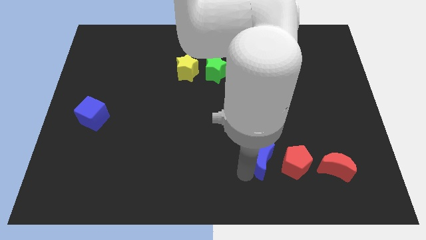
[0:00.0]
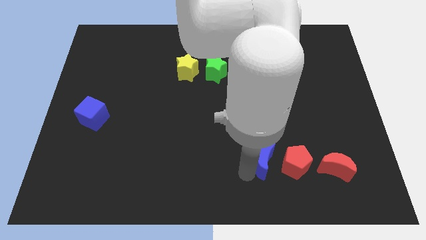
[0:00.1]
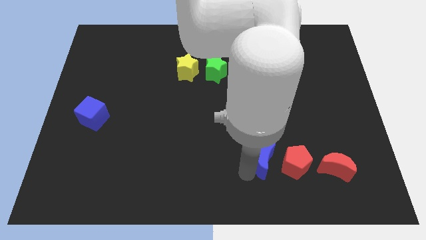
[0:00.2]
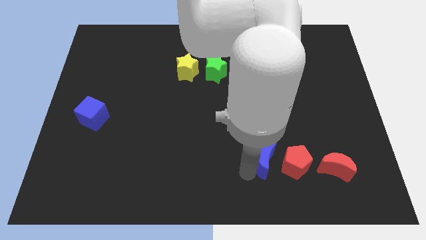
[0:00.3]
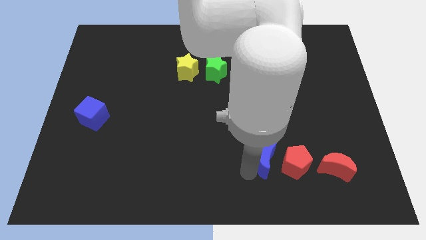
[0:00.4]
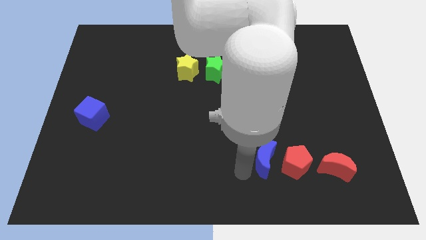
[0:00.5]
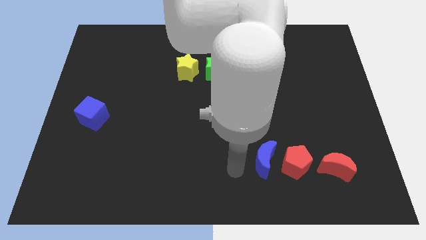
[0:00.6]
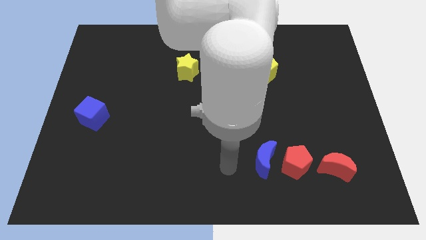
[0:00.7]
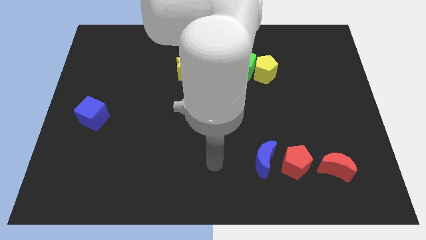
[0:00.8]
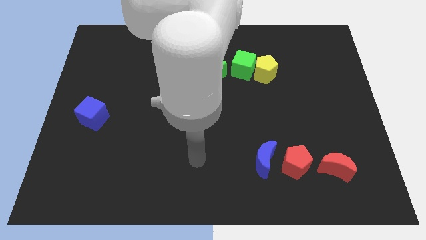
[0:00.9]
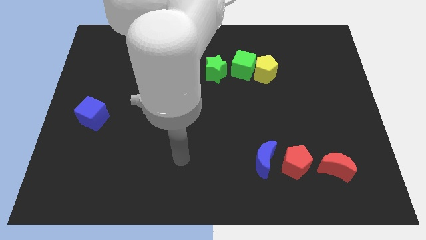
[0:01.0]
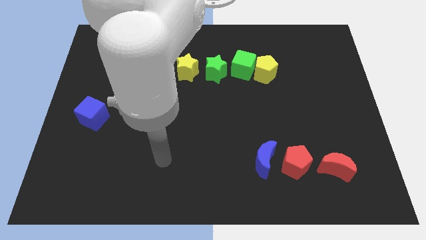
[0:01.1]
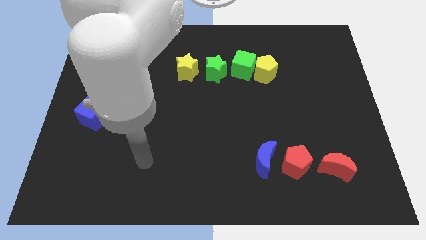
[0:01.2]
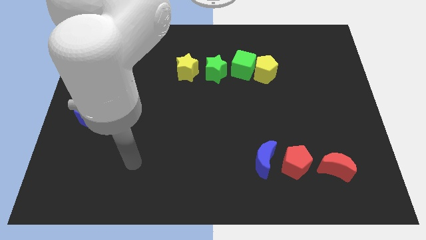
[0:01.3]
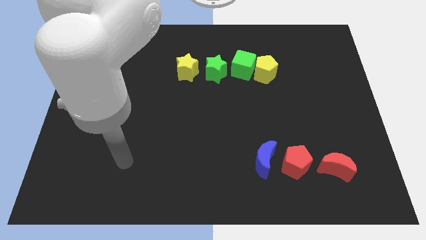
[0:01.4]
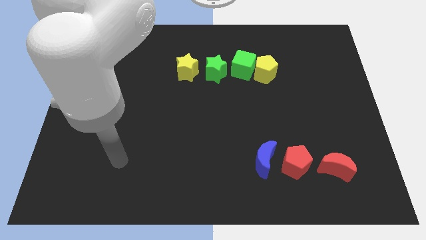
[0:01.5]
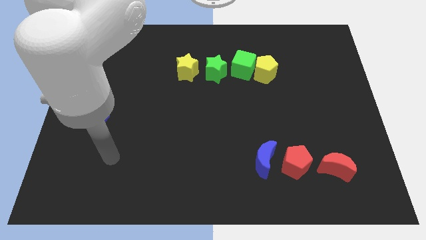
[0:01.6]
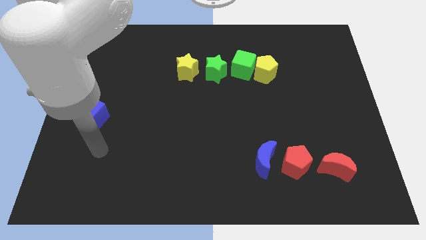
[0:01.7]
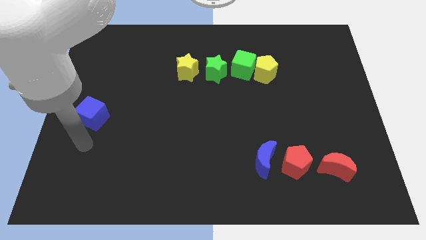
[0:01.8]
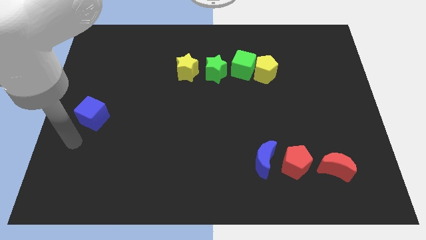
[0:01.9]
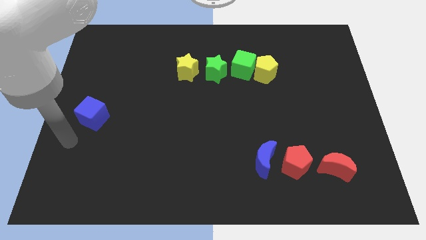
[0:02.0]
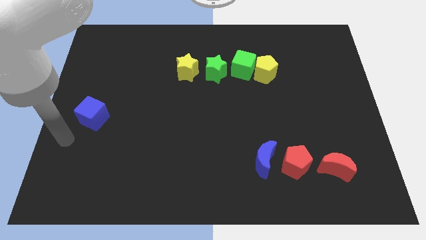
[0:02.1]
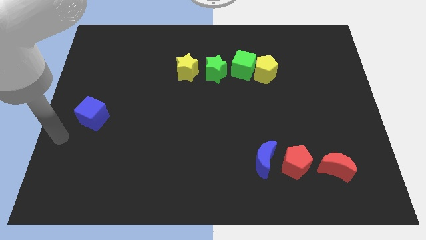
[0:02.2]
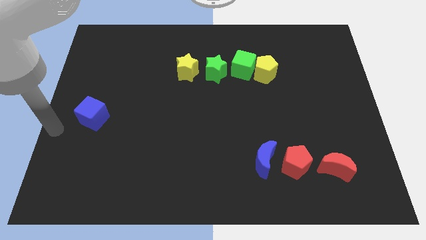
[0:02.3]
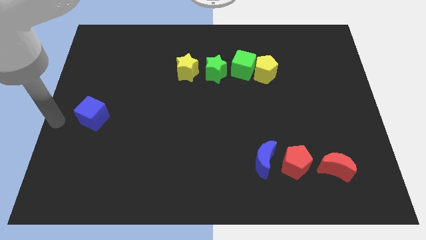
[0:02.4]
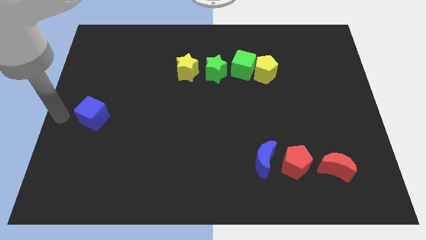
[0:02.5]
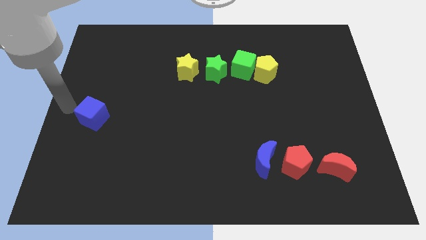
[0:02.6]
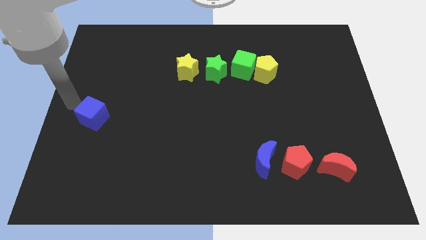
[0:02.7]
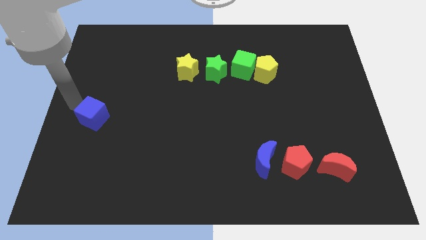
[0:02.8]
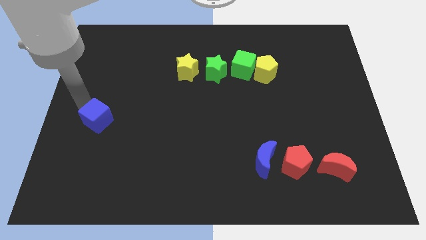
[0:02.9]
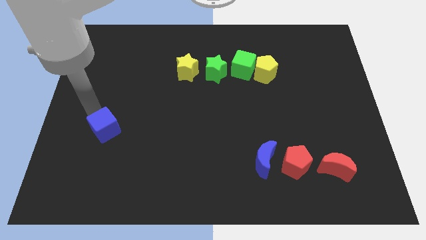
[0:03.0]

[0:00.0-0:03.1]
push the blue crescent to the left of the red pentagon to form a horizontal line of blocks

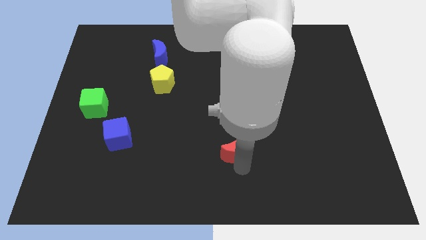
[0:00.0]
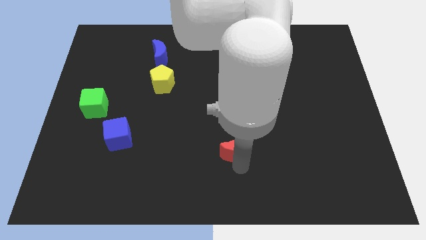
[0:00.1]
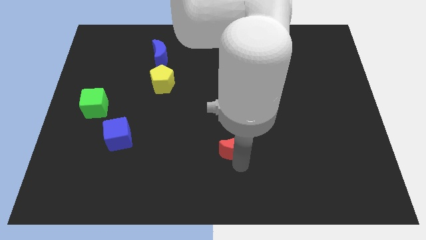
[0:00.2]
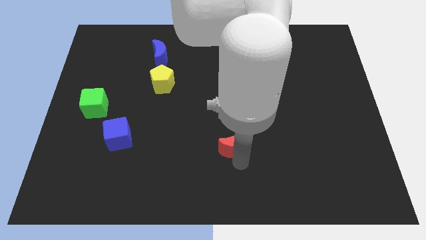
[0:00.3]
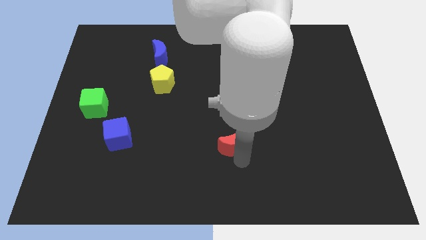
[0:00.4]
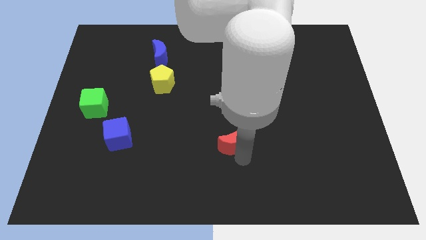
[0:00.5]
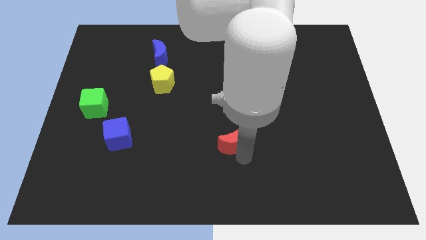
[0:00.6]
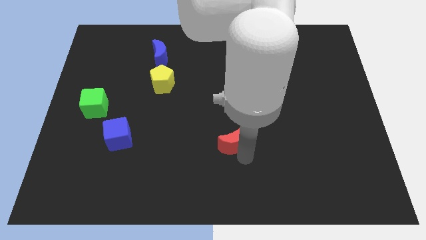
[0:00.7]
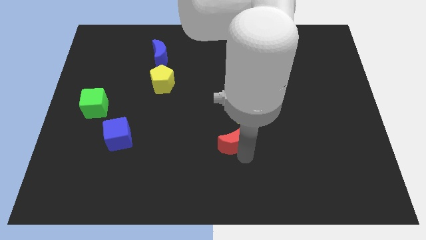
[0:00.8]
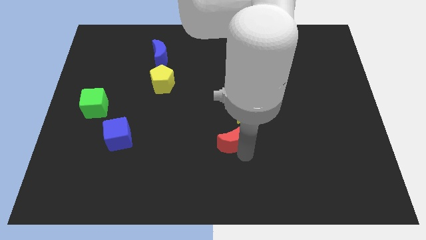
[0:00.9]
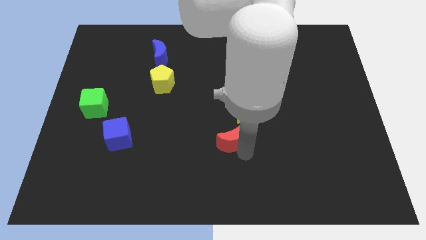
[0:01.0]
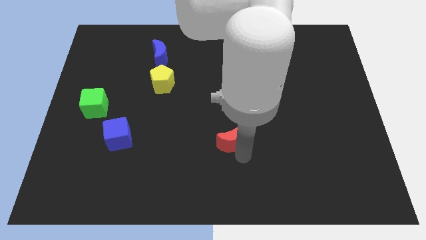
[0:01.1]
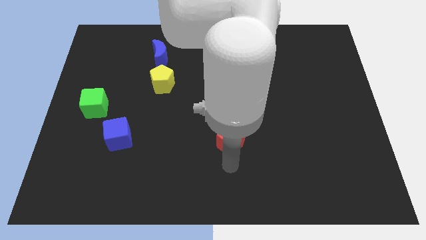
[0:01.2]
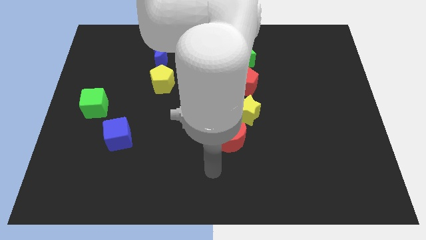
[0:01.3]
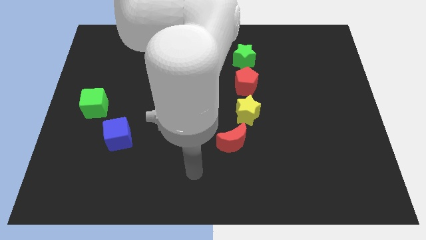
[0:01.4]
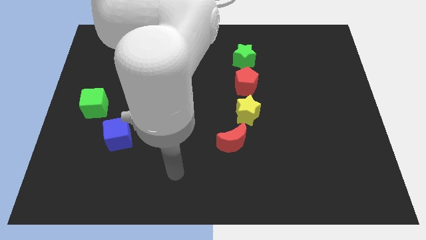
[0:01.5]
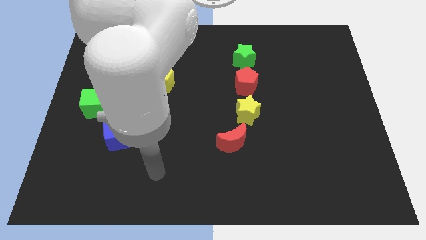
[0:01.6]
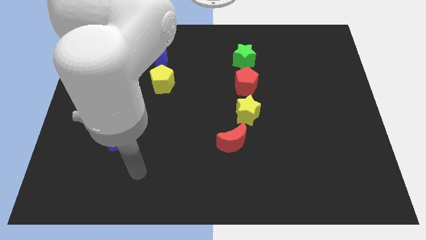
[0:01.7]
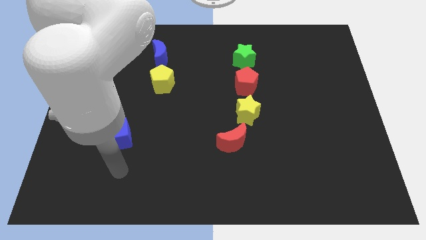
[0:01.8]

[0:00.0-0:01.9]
place red moon to the bottom left of the yellow star

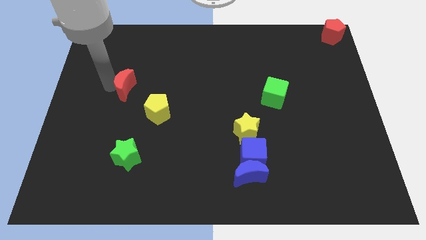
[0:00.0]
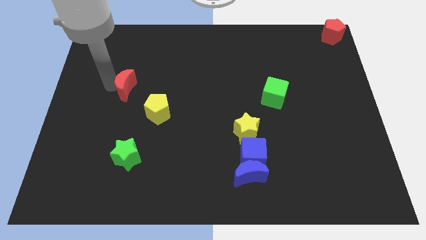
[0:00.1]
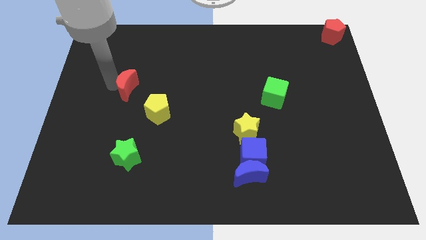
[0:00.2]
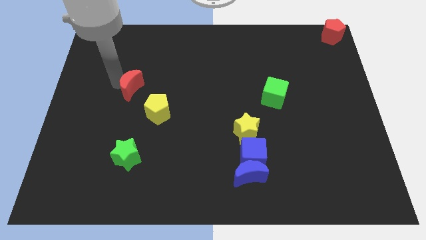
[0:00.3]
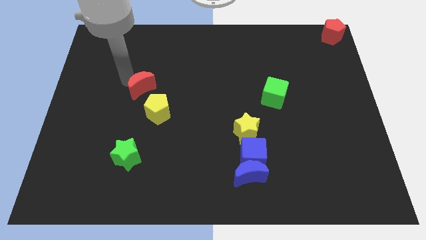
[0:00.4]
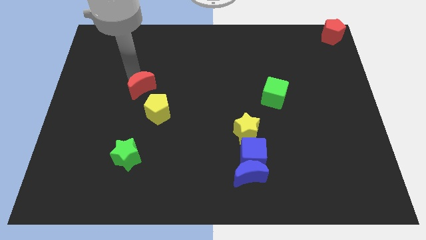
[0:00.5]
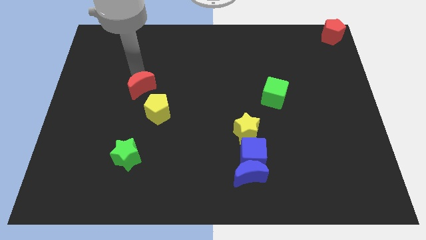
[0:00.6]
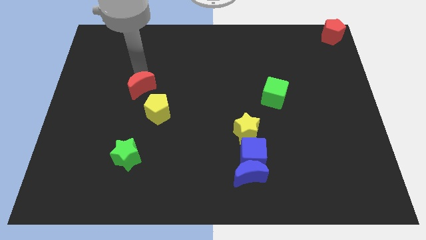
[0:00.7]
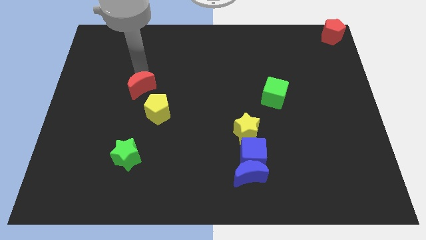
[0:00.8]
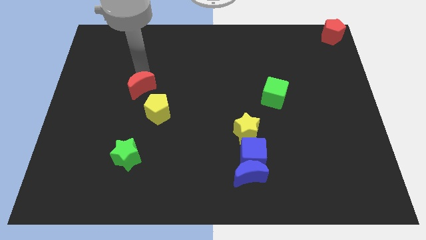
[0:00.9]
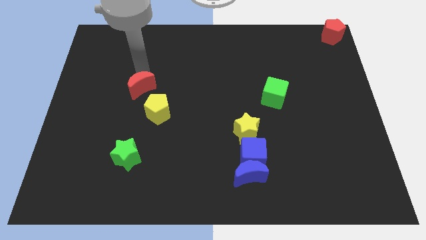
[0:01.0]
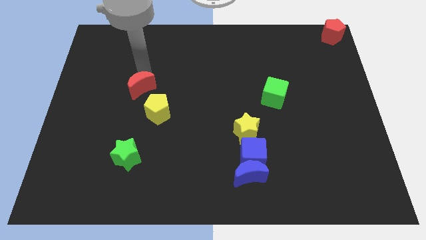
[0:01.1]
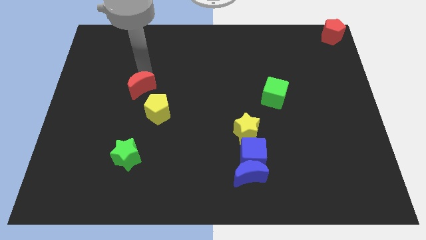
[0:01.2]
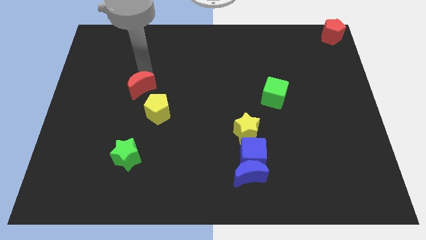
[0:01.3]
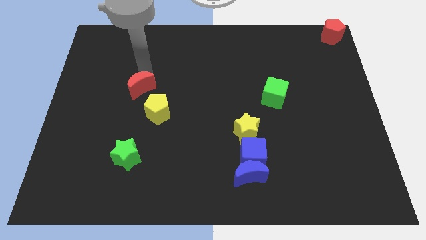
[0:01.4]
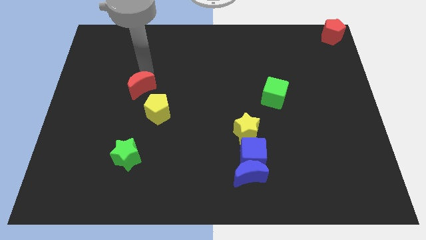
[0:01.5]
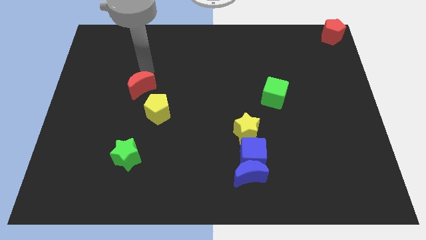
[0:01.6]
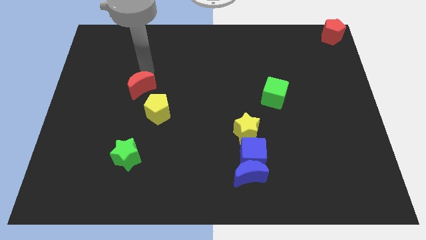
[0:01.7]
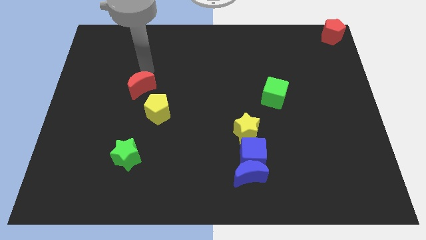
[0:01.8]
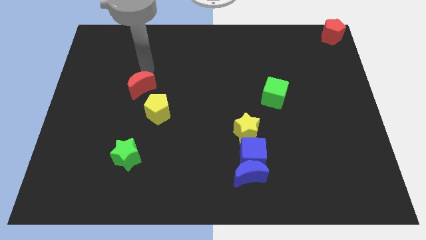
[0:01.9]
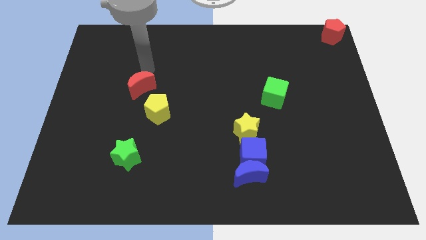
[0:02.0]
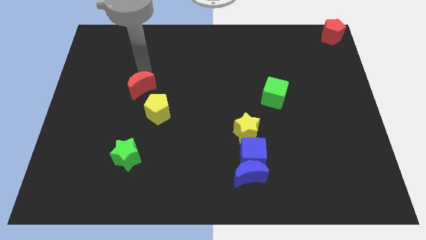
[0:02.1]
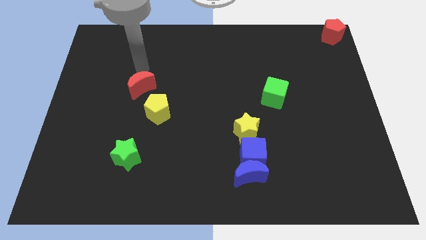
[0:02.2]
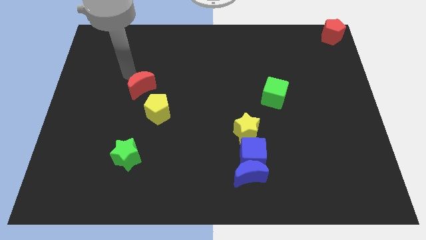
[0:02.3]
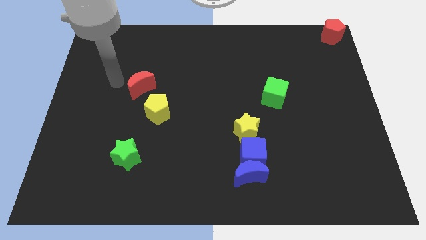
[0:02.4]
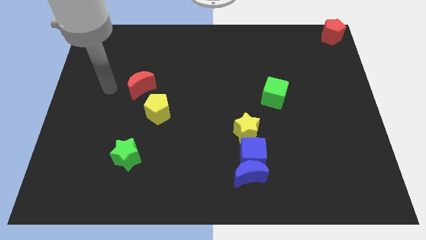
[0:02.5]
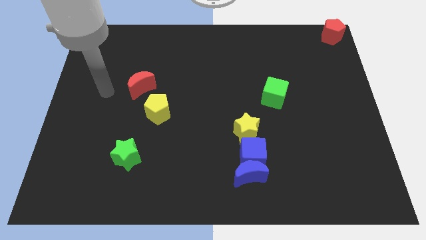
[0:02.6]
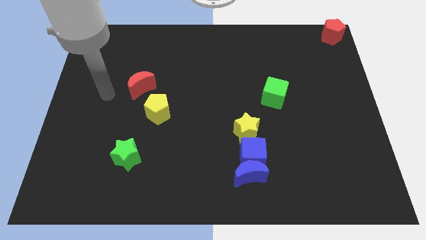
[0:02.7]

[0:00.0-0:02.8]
place the red crescent top left to the yellow pentagon

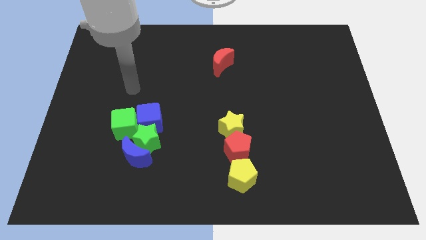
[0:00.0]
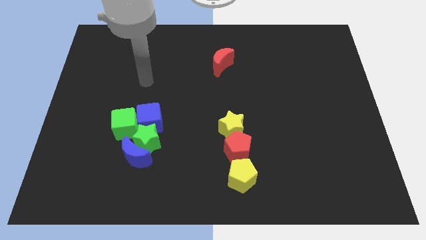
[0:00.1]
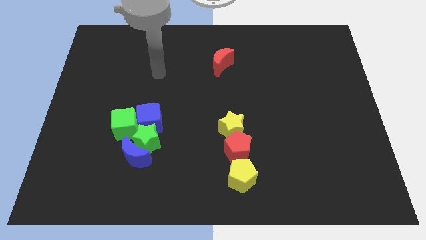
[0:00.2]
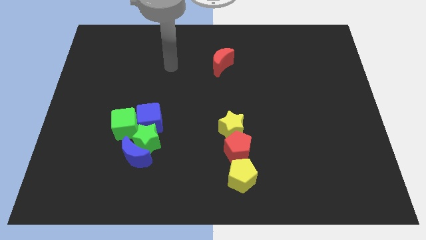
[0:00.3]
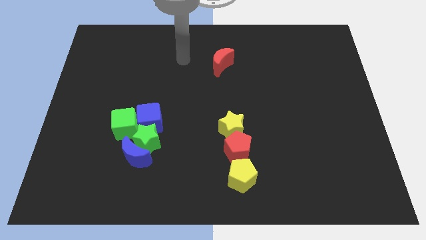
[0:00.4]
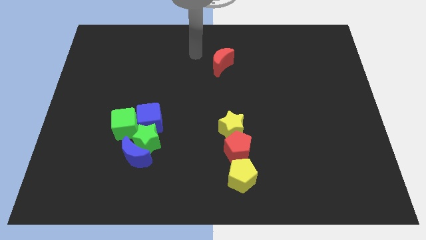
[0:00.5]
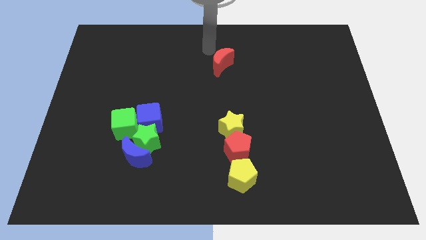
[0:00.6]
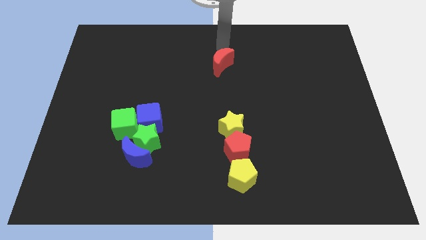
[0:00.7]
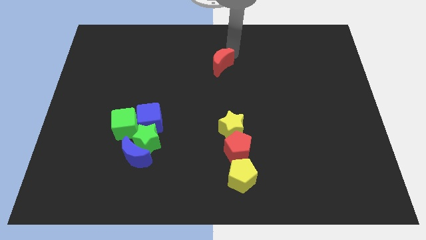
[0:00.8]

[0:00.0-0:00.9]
move the arm to the top of the red moon

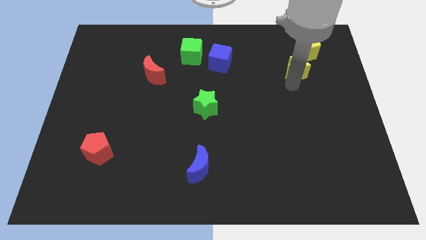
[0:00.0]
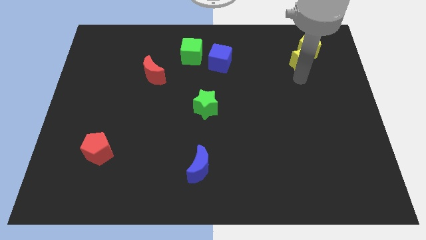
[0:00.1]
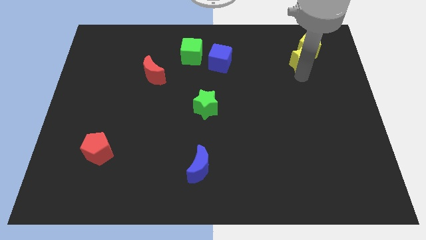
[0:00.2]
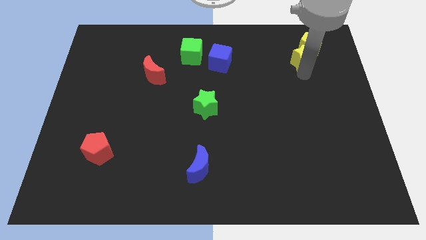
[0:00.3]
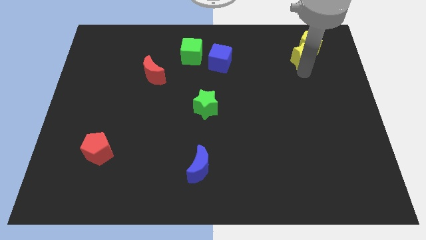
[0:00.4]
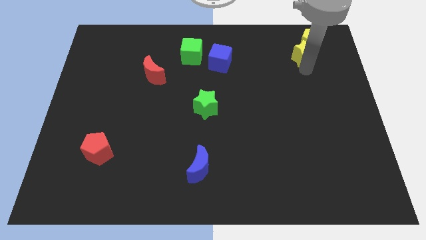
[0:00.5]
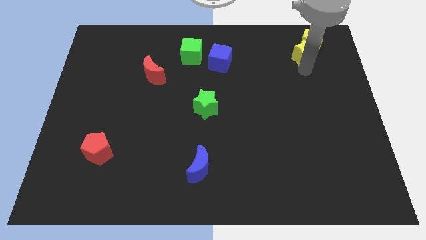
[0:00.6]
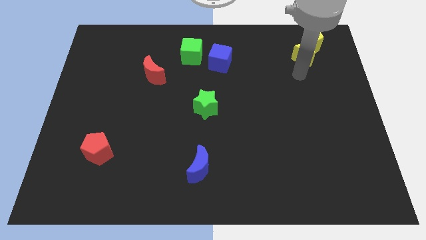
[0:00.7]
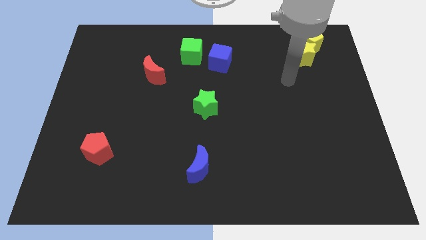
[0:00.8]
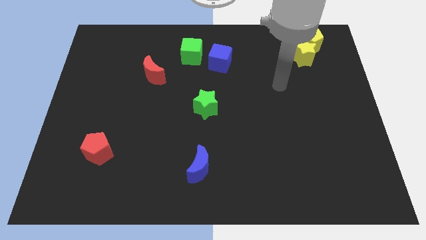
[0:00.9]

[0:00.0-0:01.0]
push yellow star in to yellow pentagon
